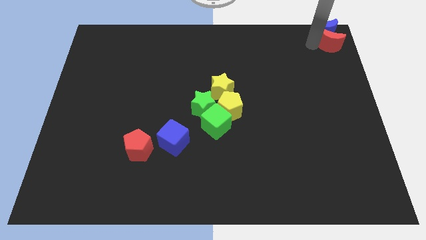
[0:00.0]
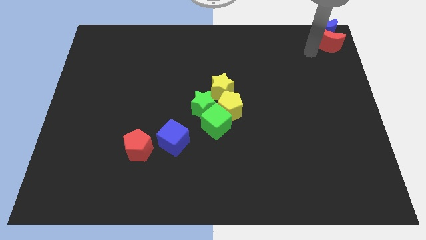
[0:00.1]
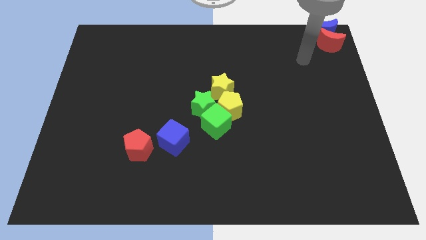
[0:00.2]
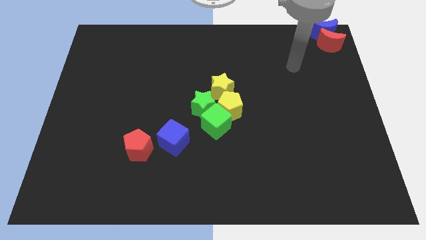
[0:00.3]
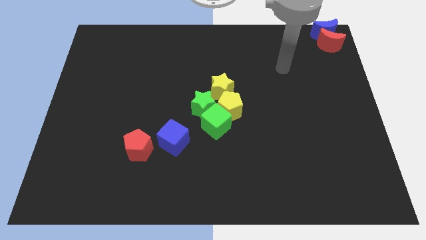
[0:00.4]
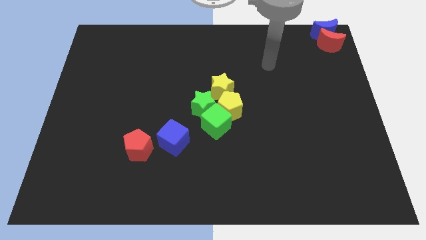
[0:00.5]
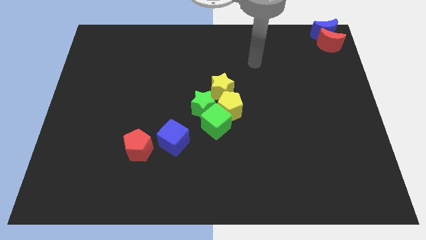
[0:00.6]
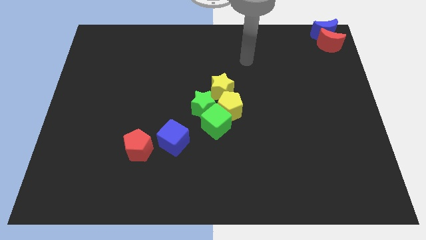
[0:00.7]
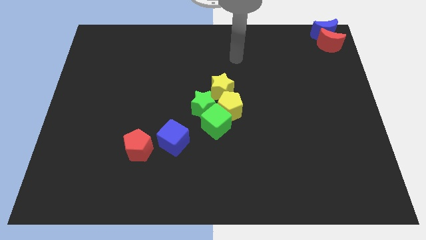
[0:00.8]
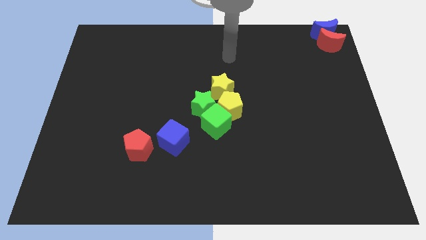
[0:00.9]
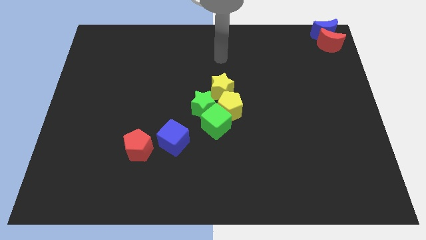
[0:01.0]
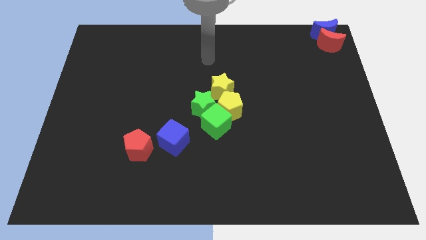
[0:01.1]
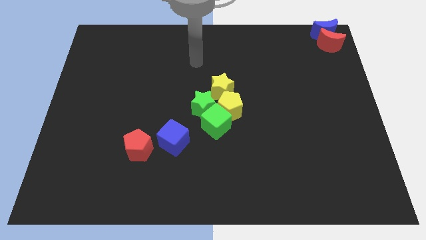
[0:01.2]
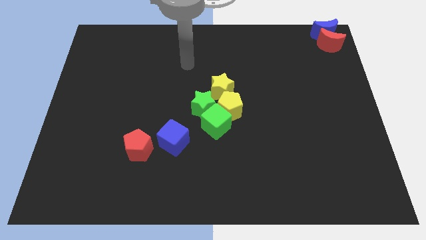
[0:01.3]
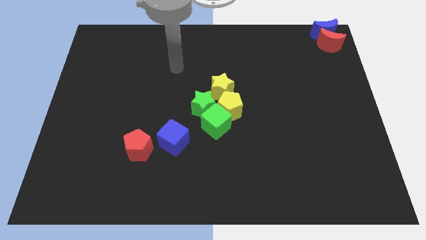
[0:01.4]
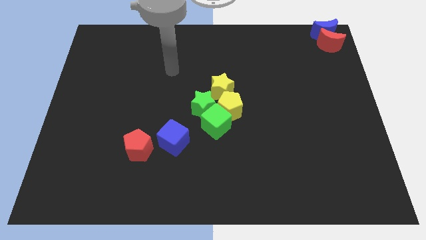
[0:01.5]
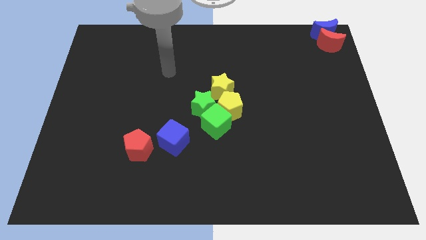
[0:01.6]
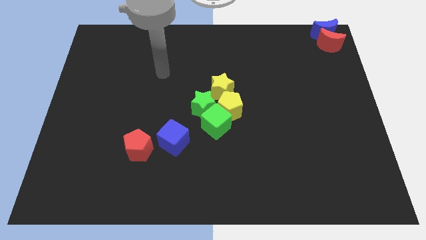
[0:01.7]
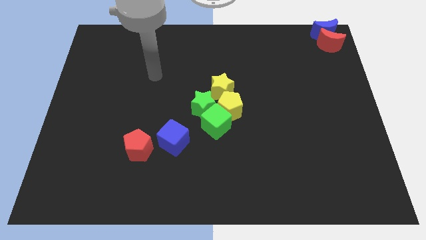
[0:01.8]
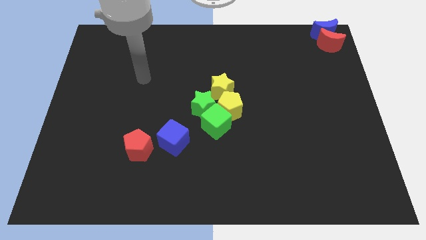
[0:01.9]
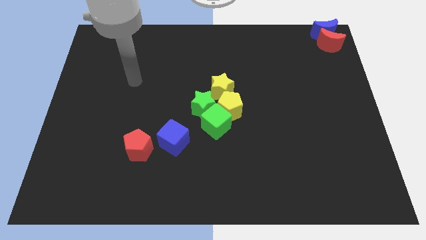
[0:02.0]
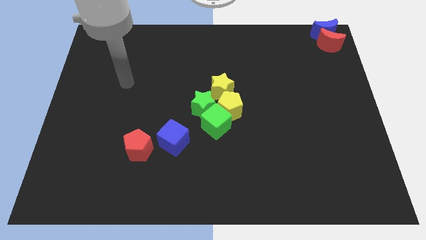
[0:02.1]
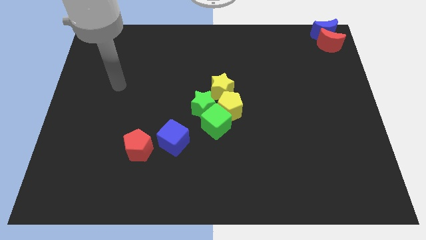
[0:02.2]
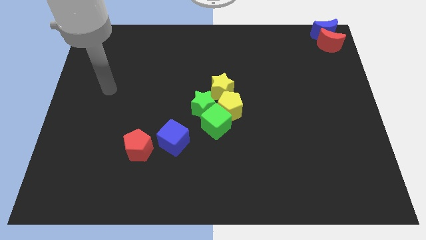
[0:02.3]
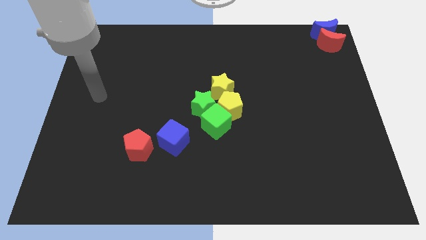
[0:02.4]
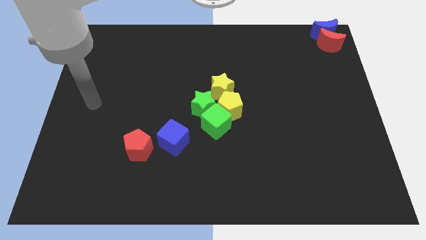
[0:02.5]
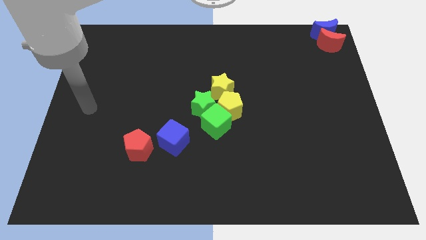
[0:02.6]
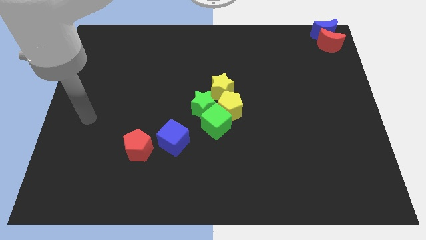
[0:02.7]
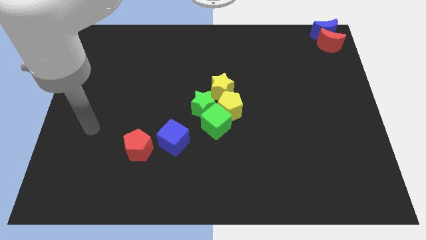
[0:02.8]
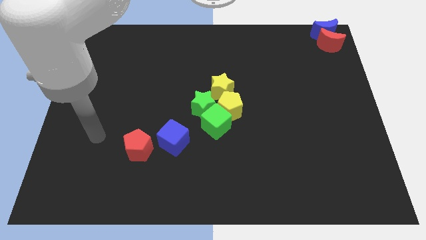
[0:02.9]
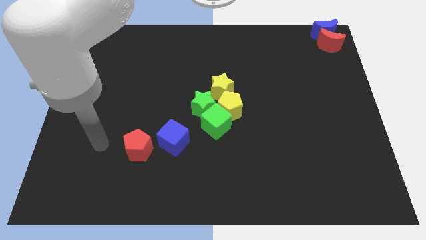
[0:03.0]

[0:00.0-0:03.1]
move the arm to the left side of the red pentagon

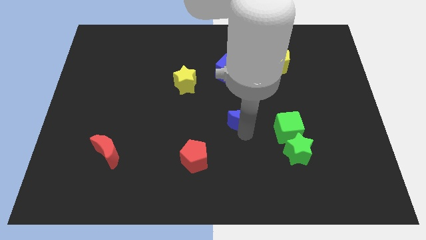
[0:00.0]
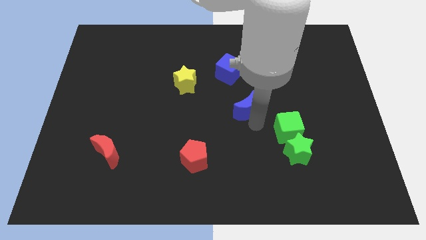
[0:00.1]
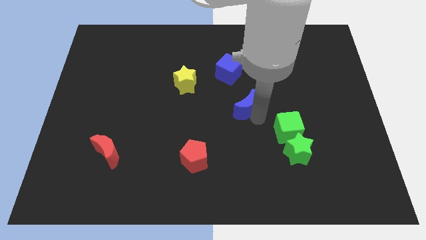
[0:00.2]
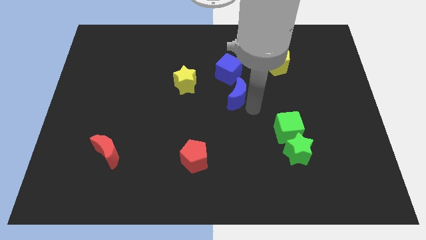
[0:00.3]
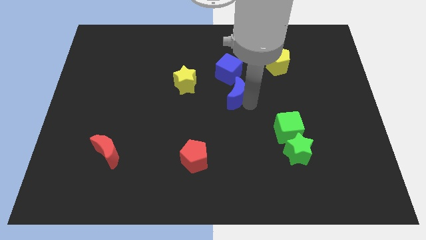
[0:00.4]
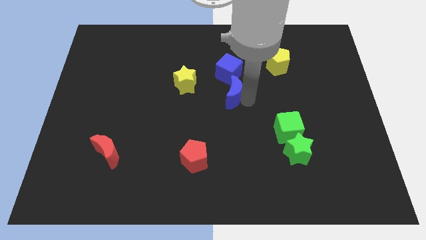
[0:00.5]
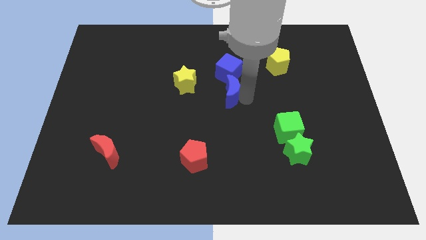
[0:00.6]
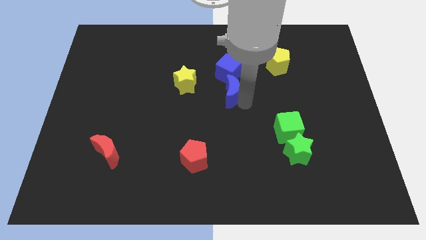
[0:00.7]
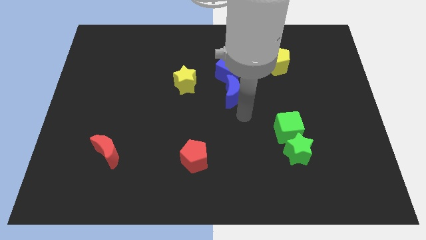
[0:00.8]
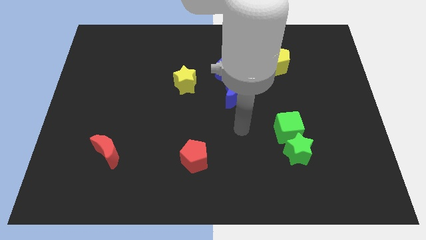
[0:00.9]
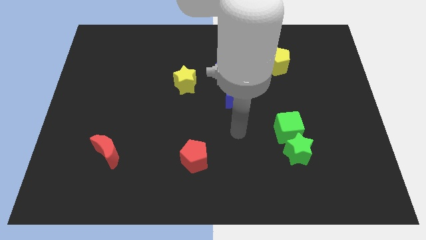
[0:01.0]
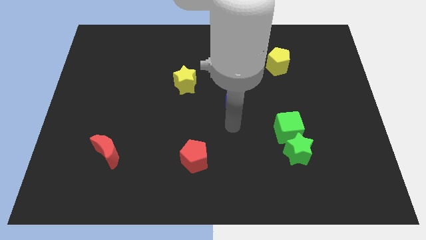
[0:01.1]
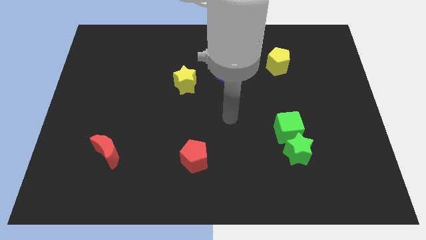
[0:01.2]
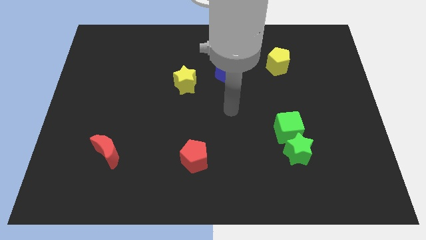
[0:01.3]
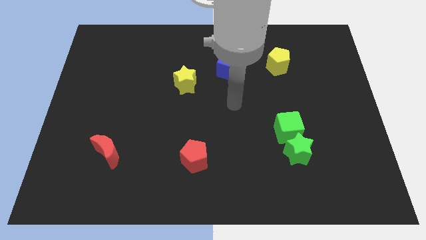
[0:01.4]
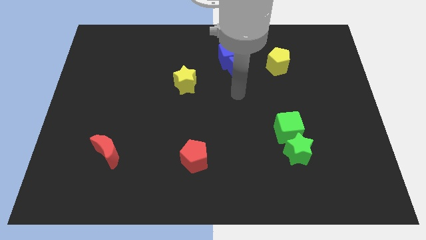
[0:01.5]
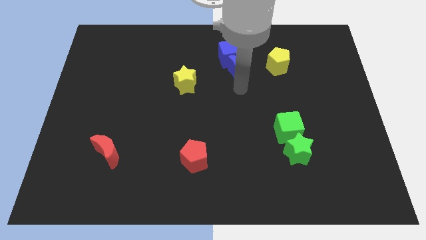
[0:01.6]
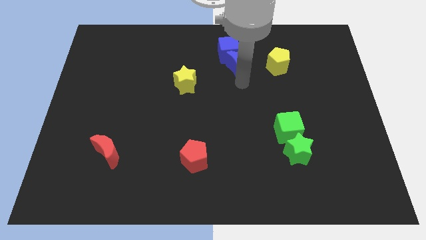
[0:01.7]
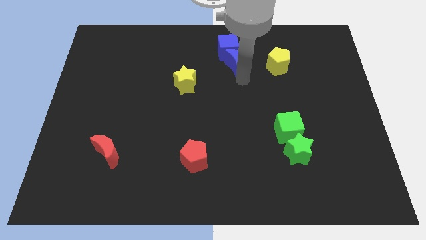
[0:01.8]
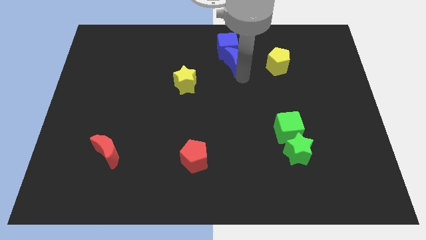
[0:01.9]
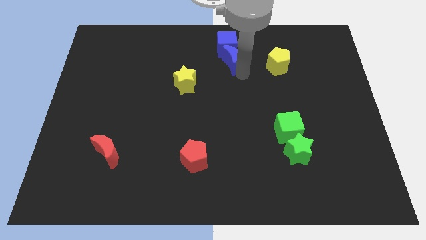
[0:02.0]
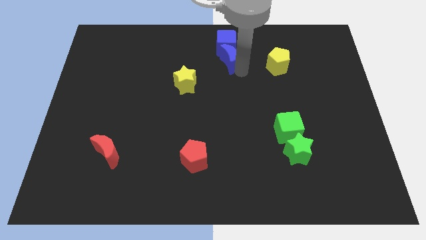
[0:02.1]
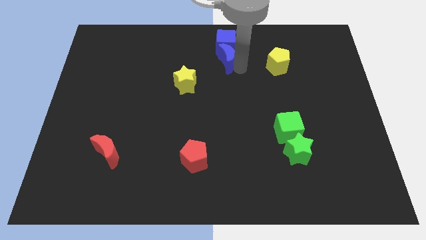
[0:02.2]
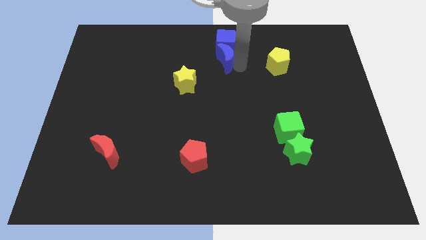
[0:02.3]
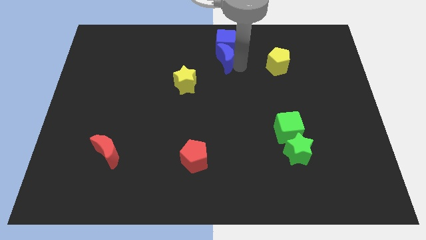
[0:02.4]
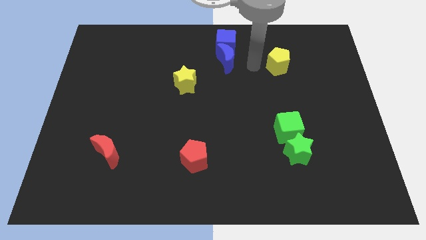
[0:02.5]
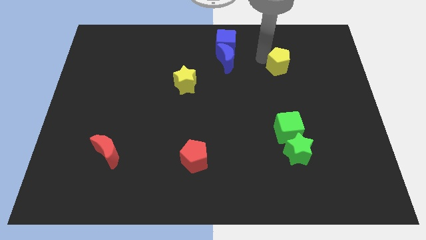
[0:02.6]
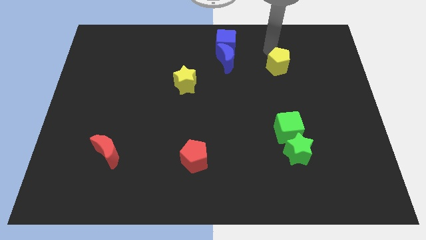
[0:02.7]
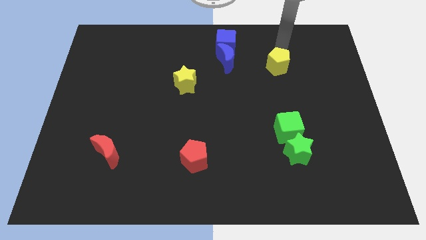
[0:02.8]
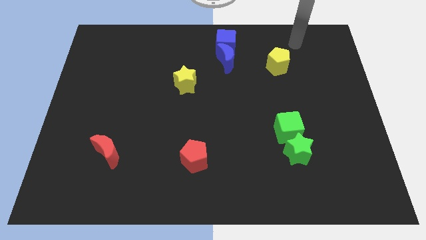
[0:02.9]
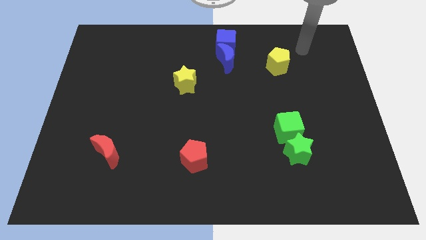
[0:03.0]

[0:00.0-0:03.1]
move the blue blocks together at the top right side of the yellow star

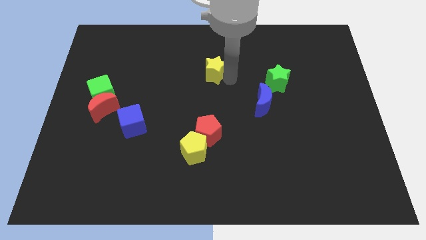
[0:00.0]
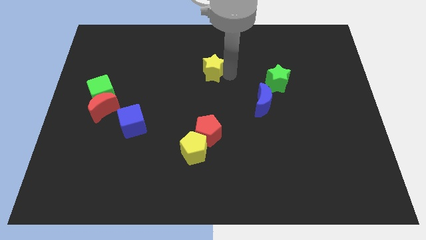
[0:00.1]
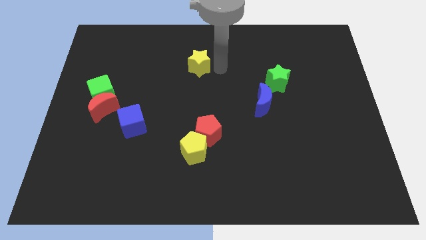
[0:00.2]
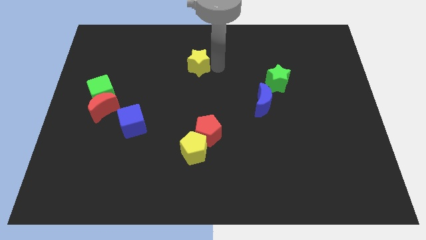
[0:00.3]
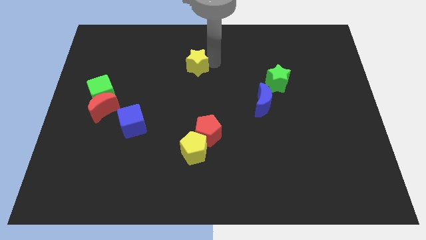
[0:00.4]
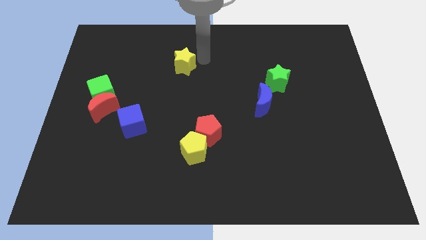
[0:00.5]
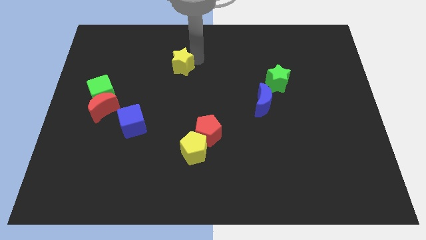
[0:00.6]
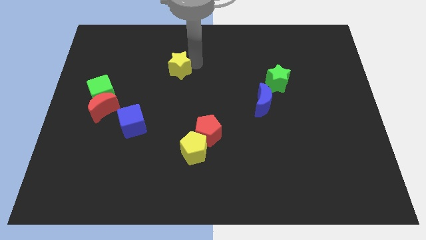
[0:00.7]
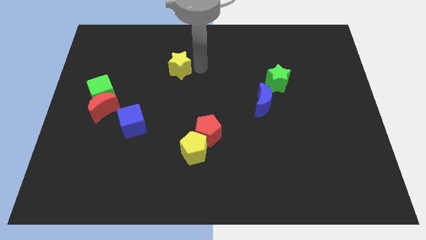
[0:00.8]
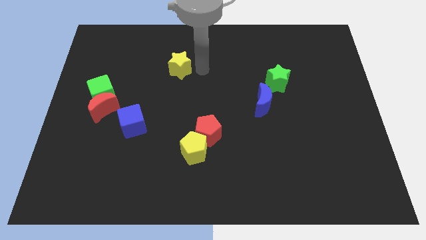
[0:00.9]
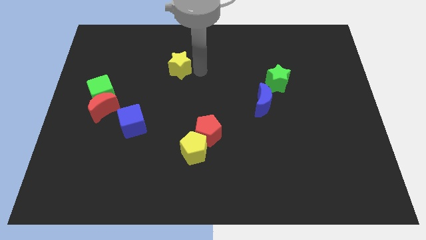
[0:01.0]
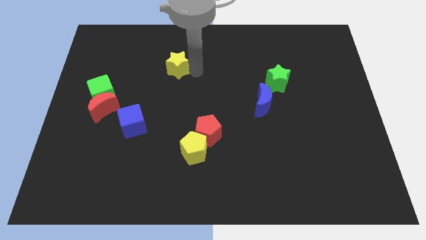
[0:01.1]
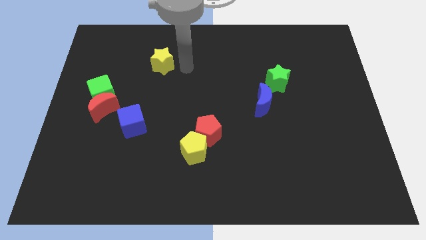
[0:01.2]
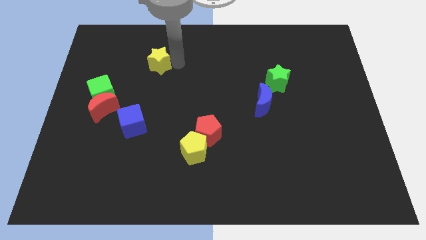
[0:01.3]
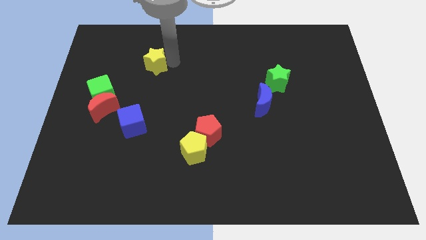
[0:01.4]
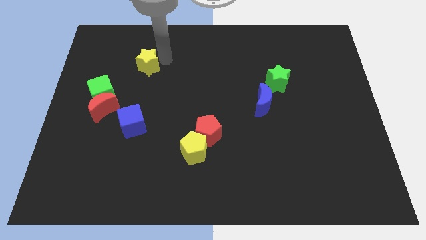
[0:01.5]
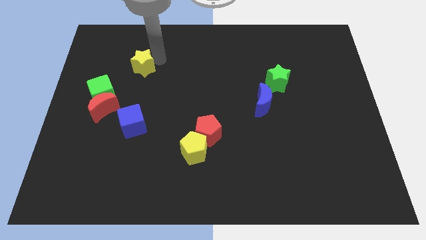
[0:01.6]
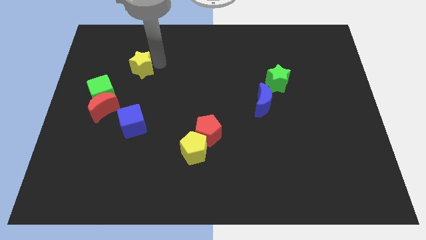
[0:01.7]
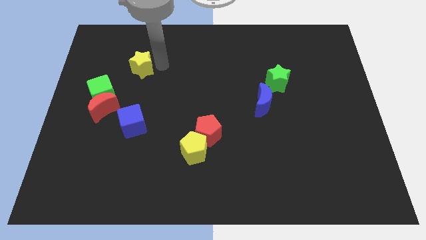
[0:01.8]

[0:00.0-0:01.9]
move the yellow star towards left

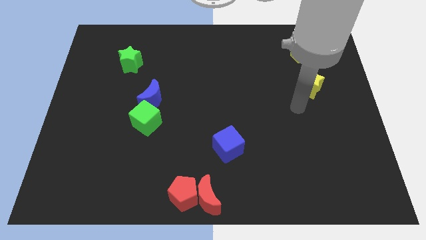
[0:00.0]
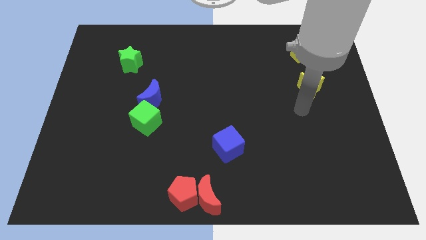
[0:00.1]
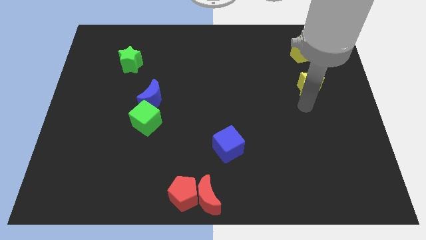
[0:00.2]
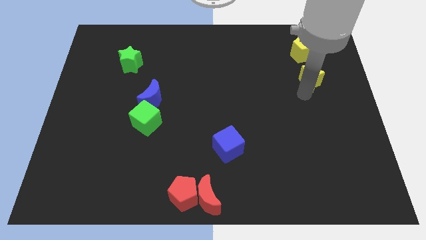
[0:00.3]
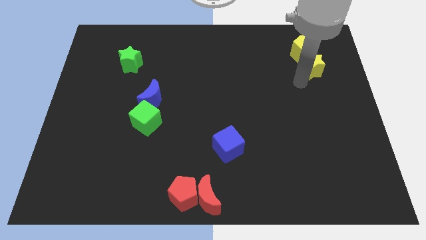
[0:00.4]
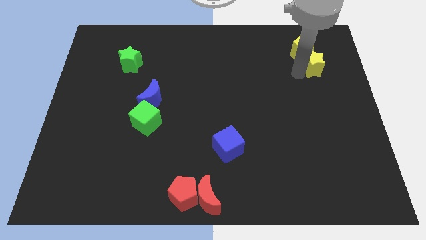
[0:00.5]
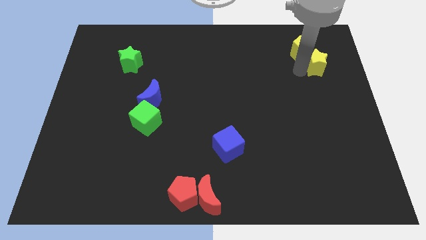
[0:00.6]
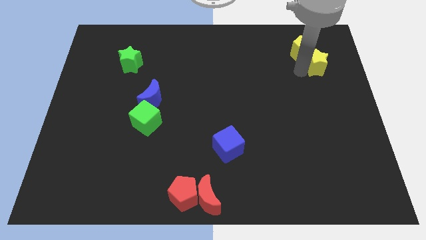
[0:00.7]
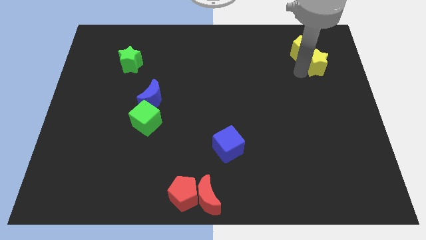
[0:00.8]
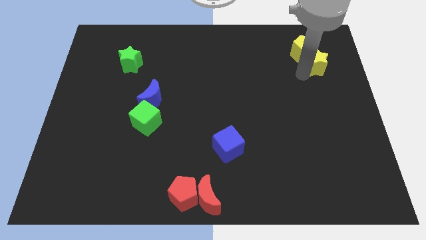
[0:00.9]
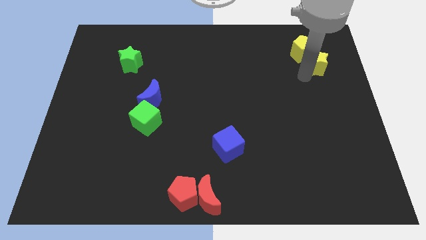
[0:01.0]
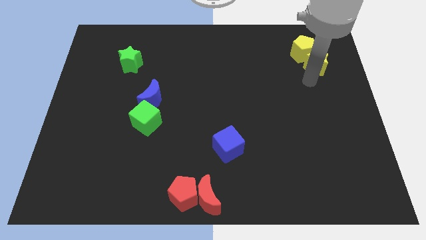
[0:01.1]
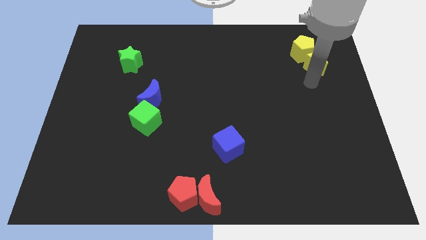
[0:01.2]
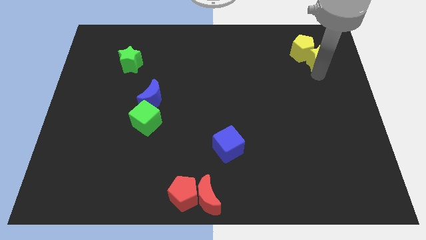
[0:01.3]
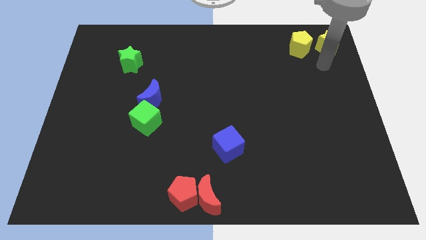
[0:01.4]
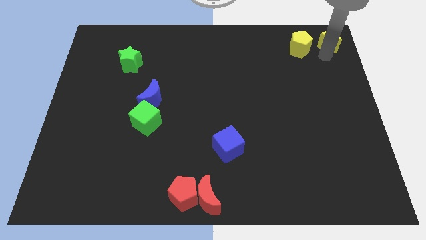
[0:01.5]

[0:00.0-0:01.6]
push the yellow star towards the top right of the board
